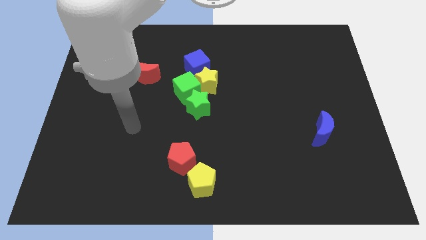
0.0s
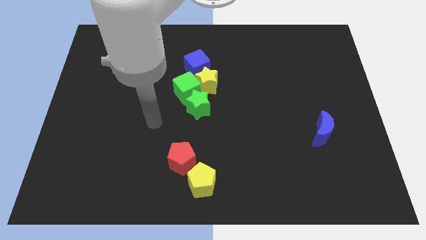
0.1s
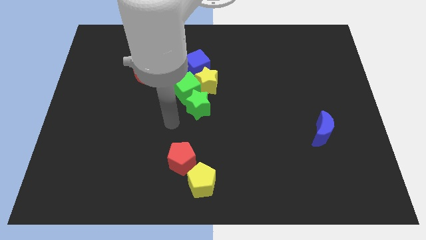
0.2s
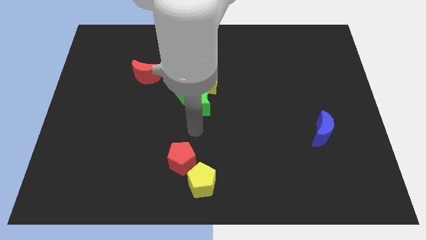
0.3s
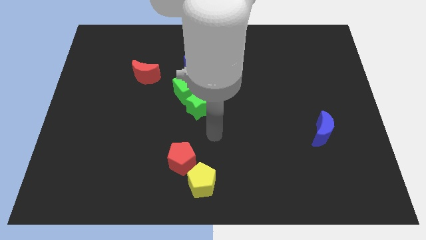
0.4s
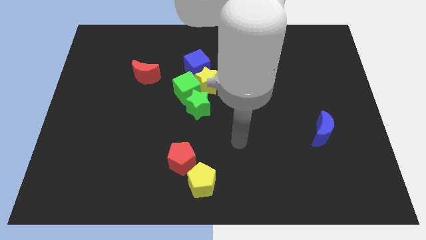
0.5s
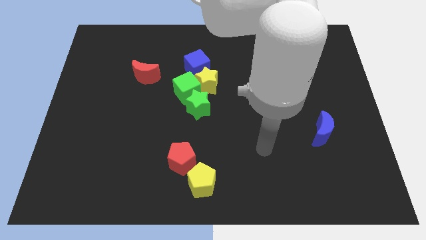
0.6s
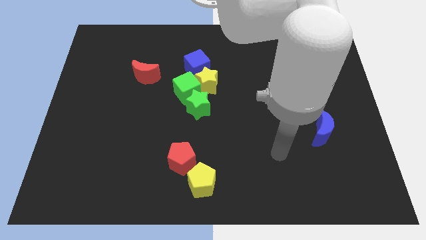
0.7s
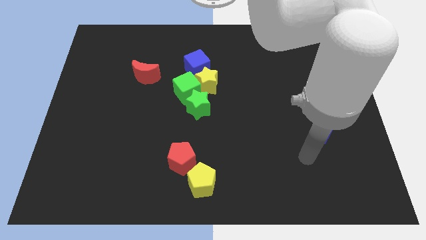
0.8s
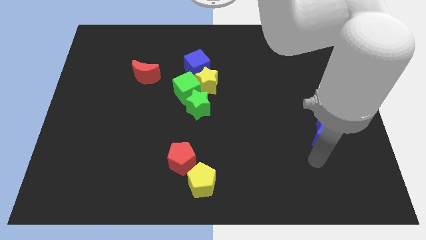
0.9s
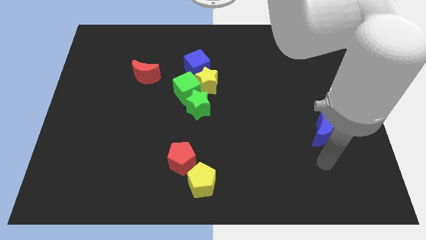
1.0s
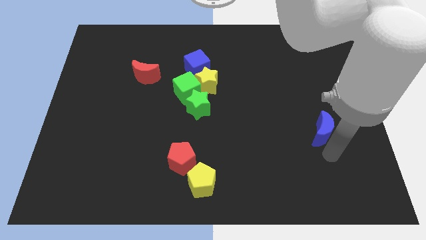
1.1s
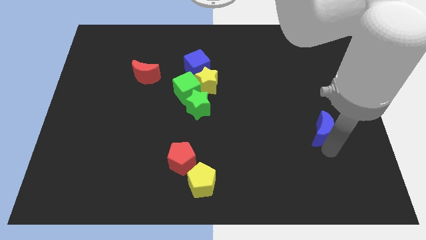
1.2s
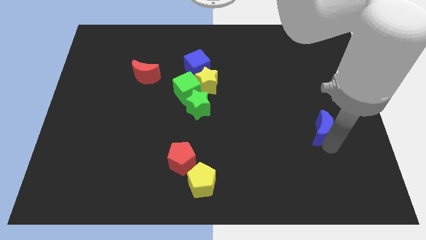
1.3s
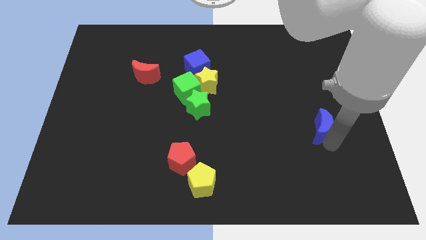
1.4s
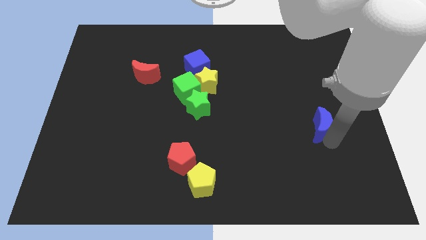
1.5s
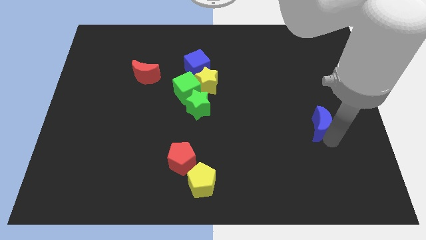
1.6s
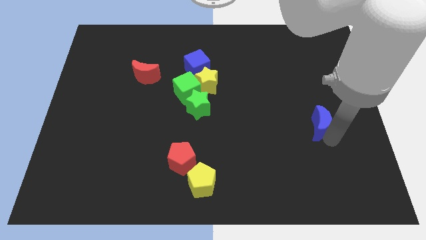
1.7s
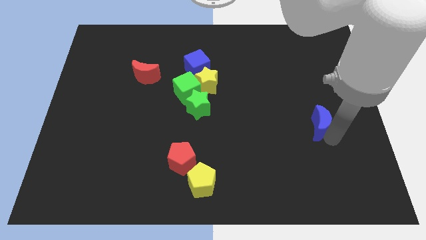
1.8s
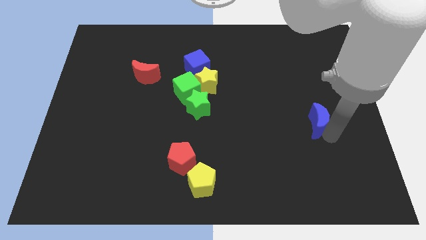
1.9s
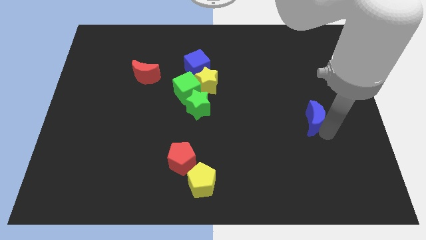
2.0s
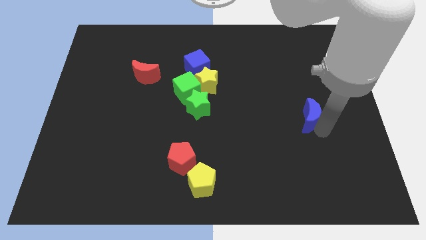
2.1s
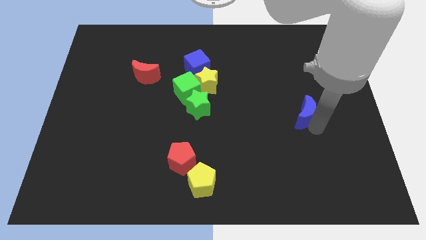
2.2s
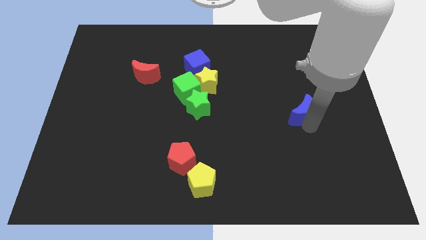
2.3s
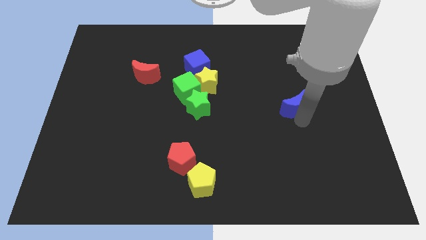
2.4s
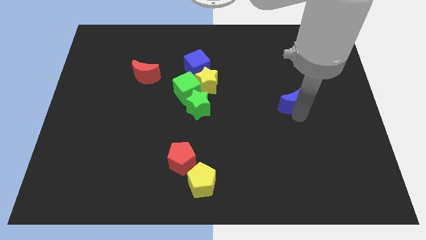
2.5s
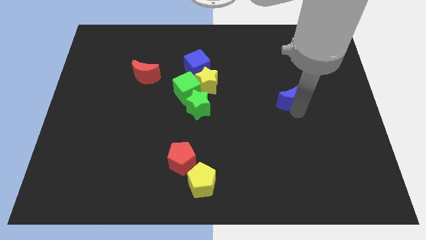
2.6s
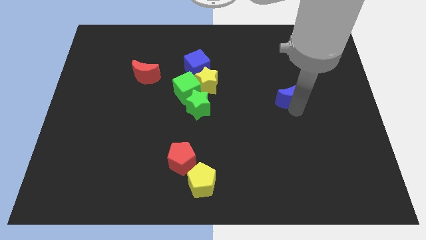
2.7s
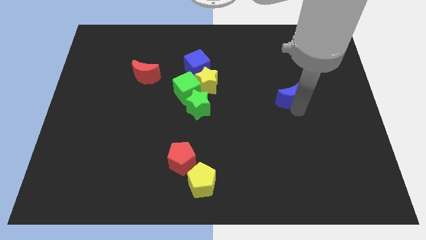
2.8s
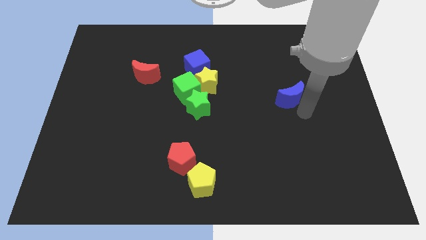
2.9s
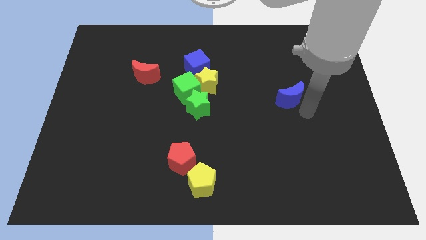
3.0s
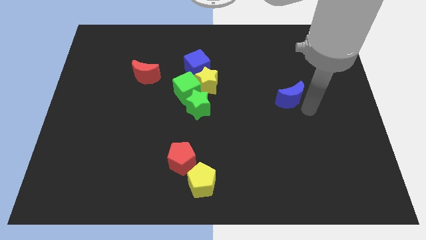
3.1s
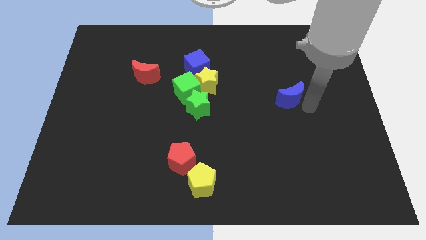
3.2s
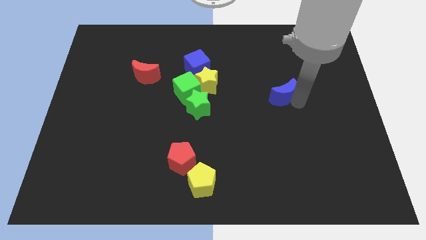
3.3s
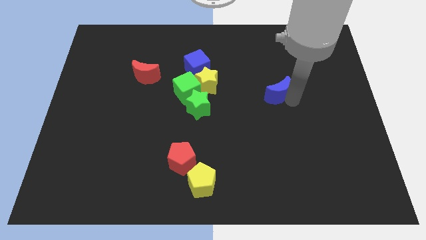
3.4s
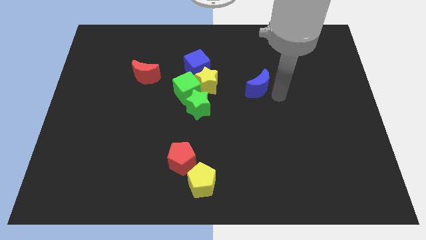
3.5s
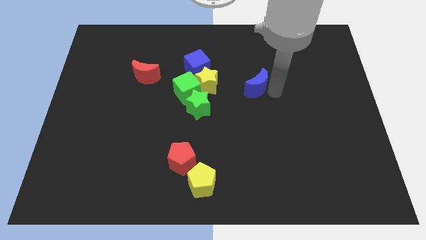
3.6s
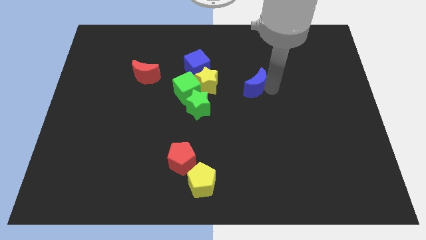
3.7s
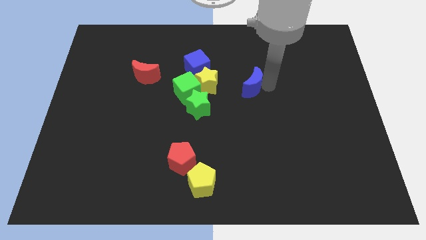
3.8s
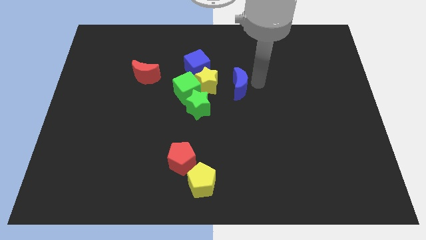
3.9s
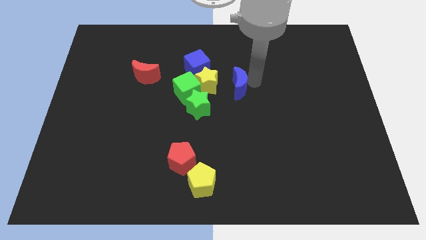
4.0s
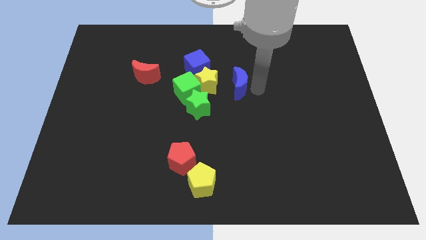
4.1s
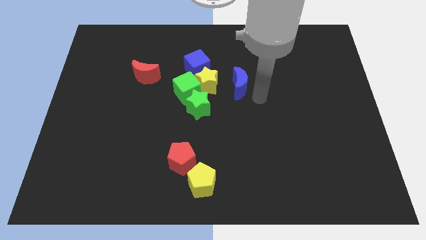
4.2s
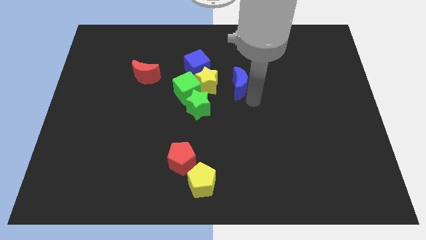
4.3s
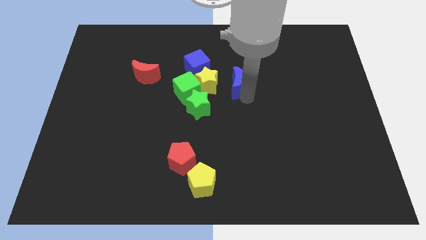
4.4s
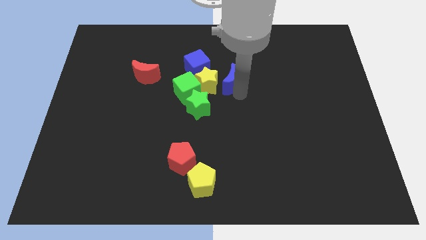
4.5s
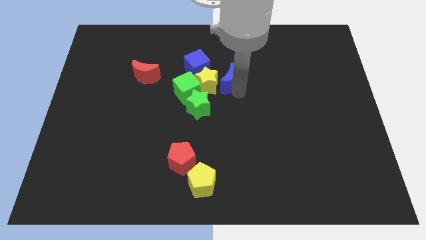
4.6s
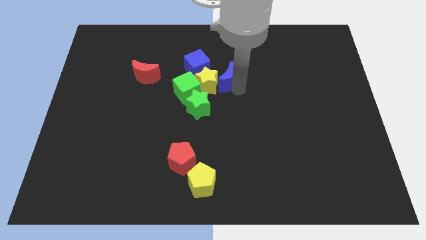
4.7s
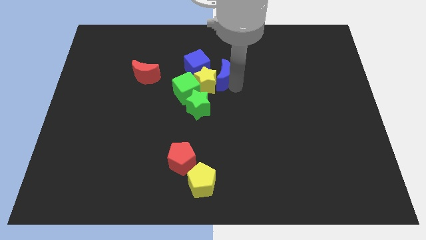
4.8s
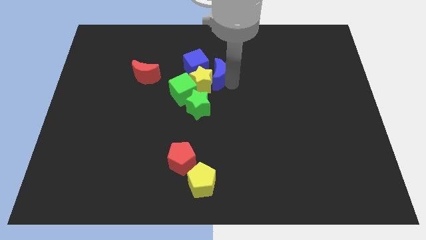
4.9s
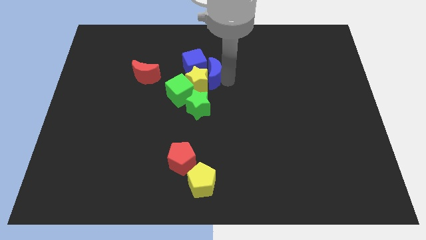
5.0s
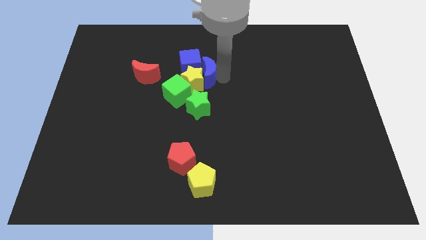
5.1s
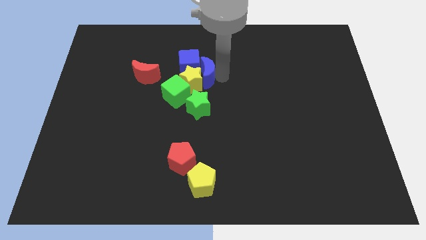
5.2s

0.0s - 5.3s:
put the blue moon close to the blue cube

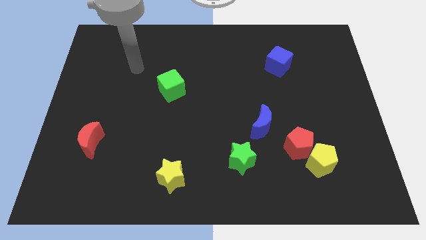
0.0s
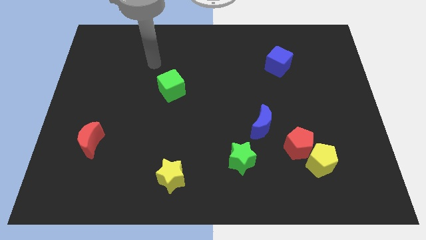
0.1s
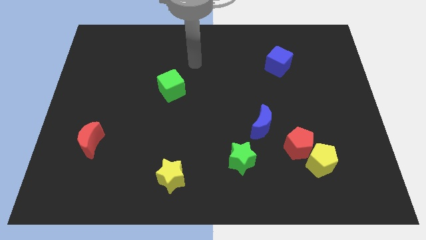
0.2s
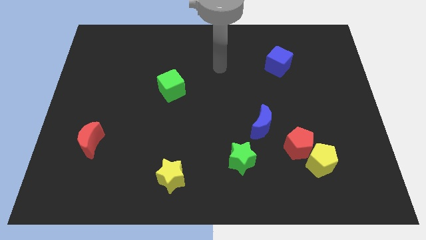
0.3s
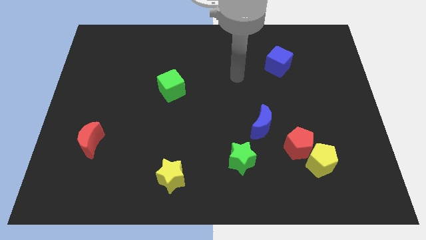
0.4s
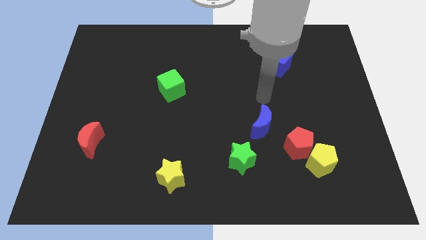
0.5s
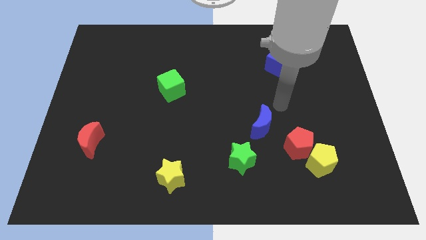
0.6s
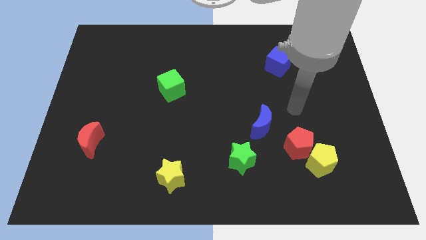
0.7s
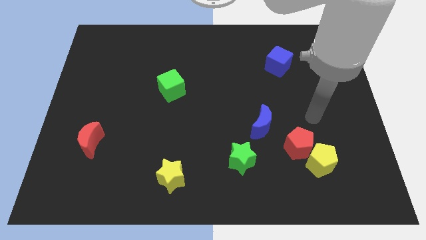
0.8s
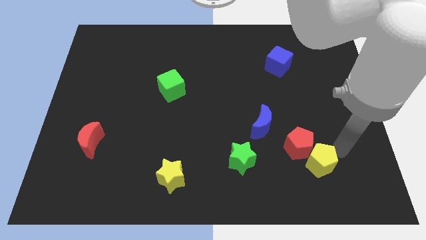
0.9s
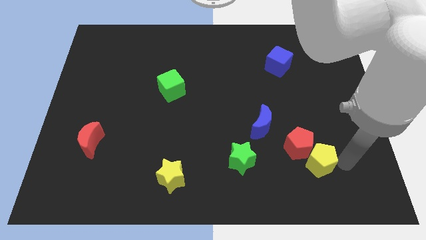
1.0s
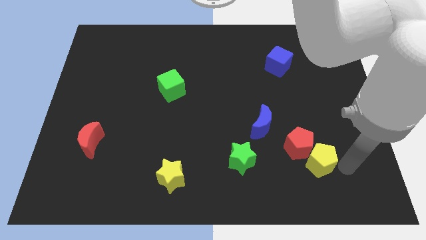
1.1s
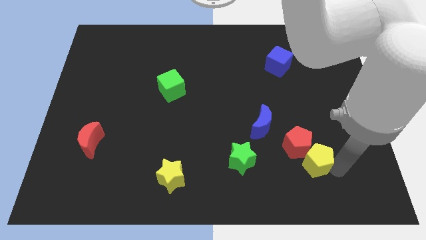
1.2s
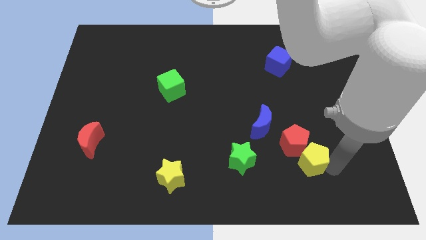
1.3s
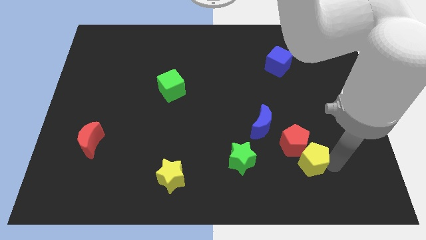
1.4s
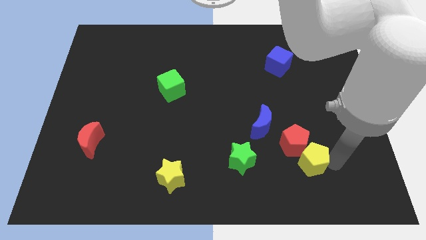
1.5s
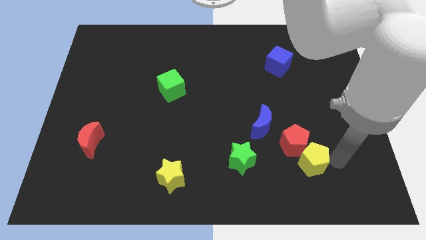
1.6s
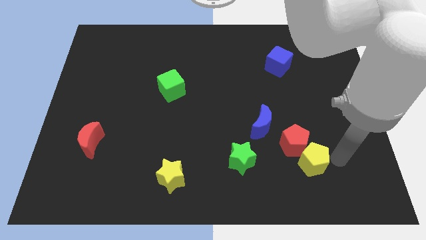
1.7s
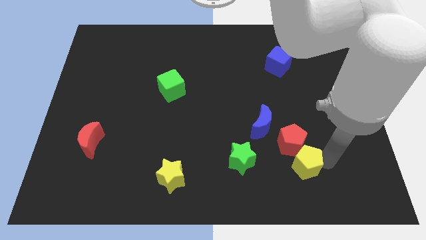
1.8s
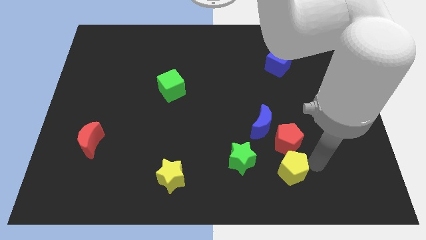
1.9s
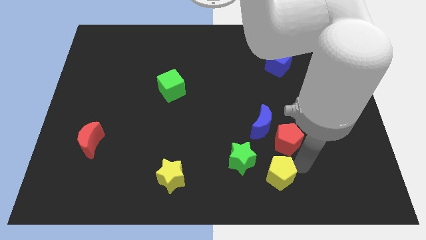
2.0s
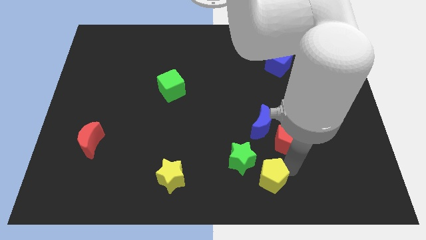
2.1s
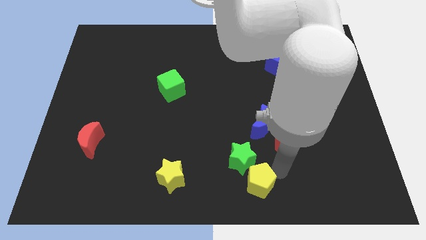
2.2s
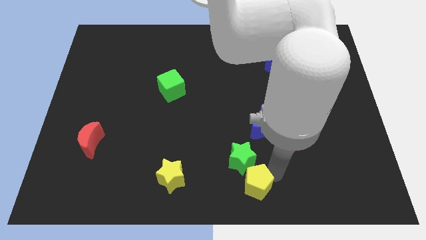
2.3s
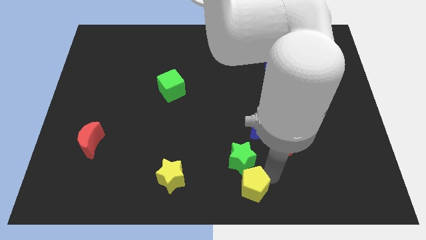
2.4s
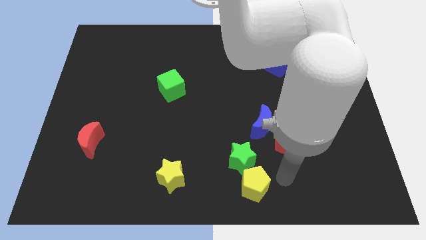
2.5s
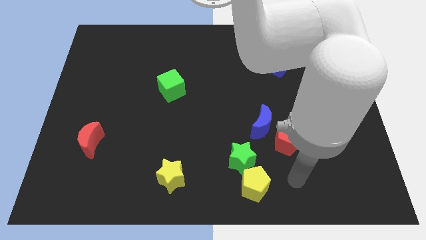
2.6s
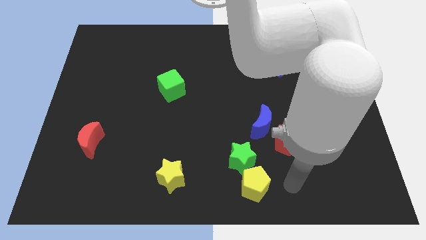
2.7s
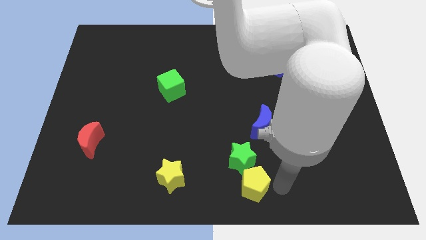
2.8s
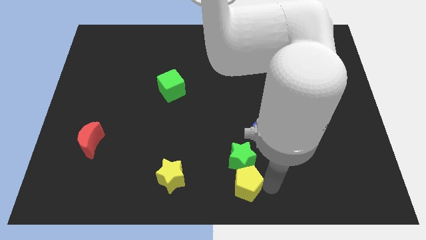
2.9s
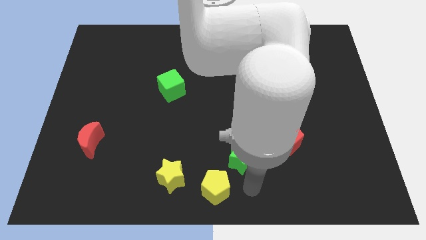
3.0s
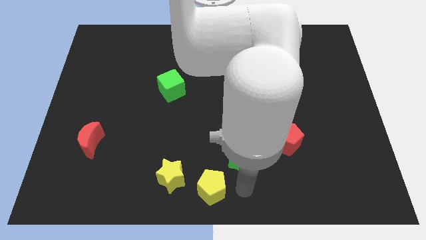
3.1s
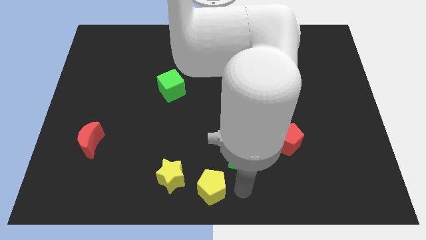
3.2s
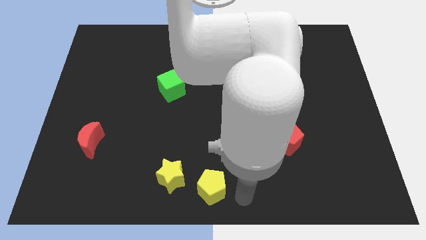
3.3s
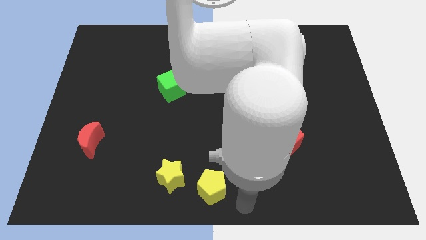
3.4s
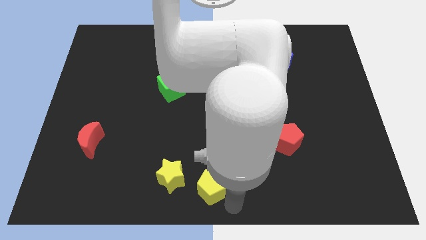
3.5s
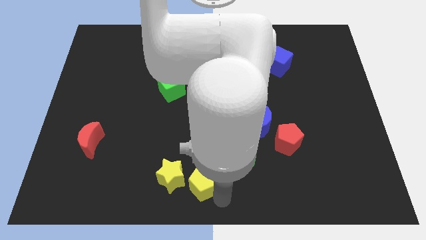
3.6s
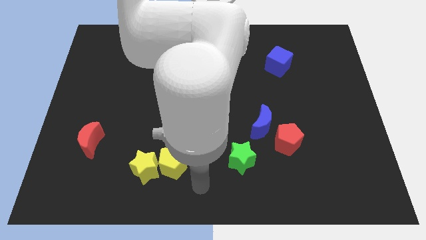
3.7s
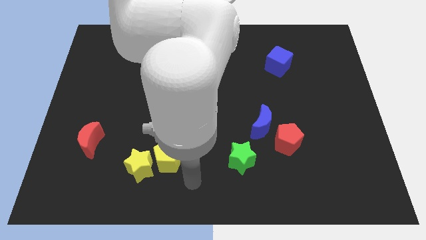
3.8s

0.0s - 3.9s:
put the yellow pentagon close to the yellow star
